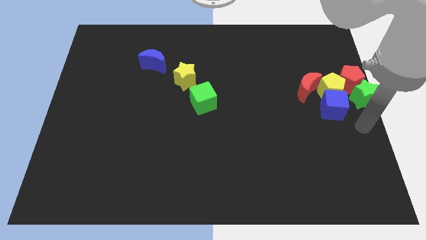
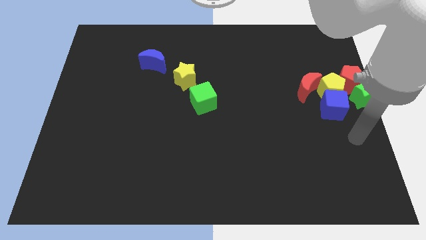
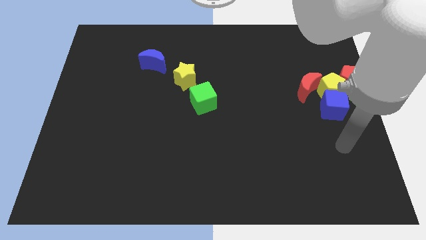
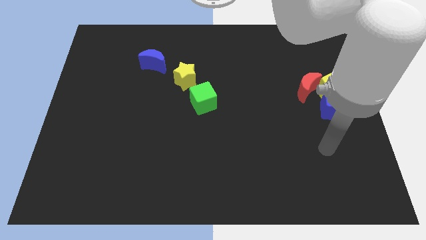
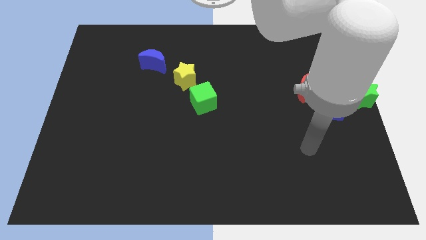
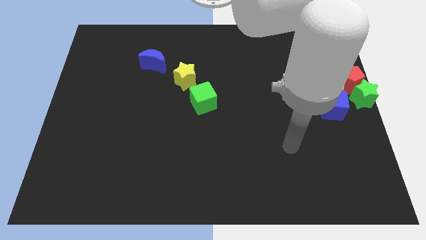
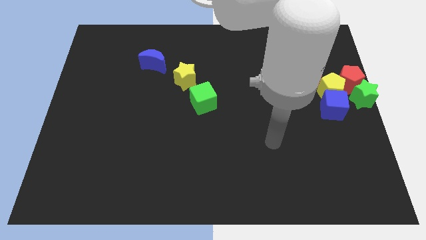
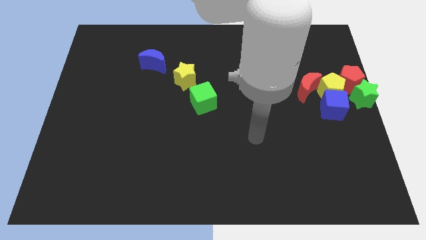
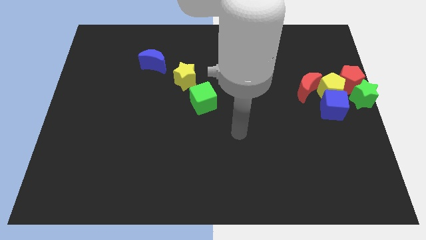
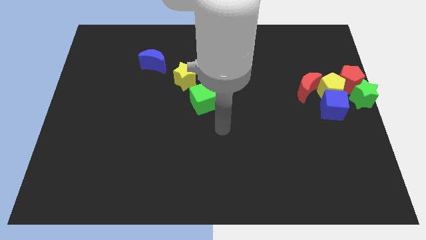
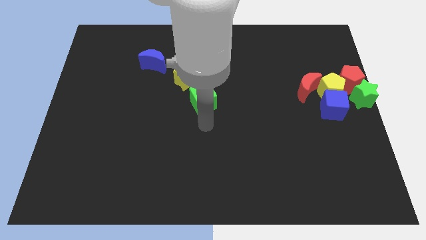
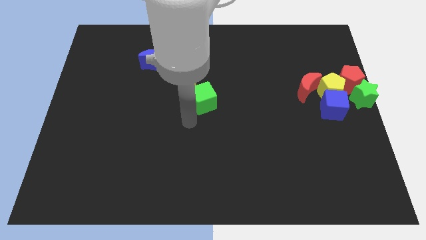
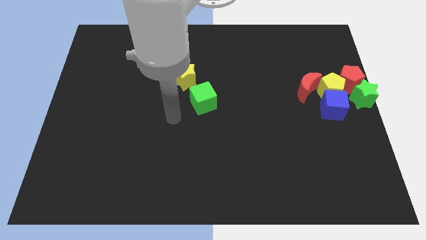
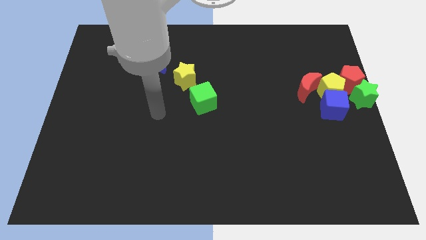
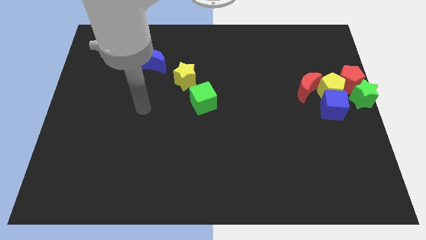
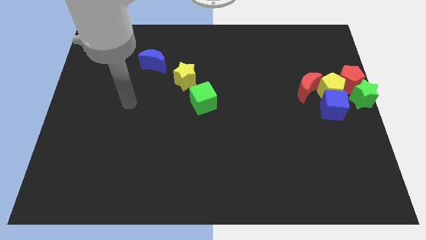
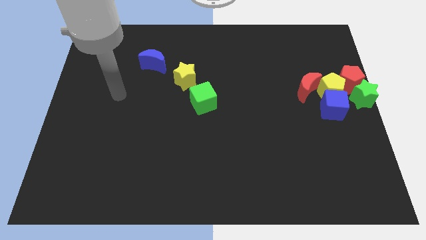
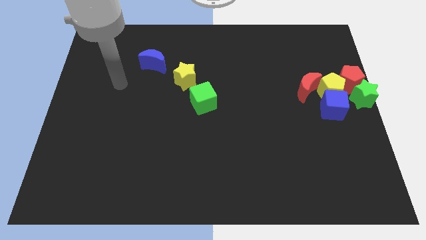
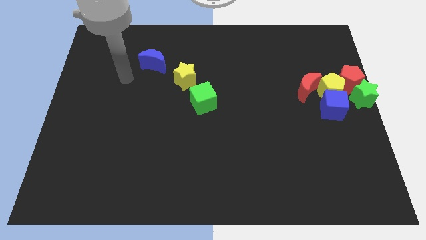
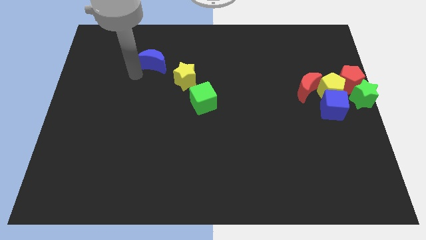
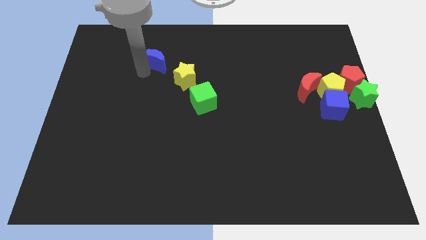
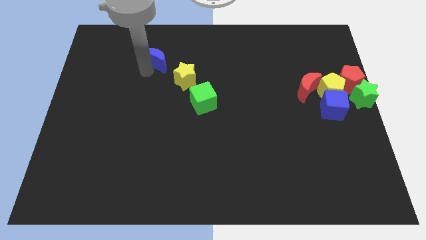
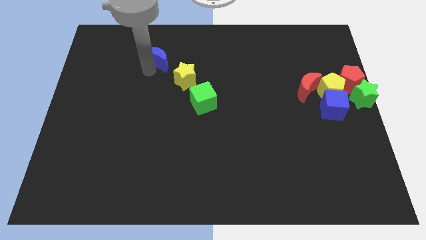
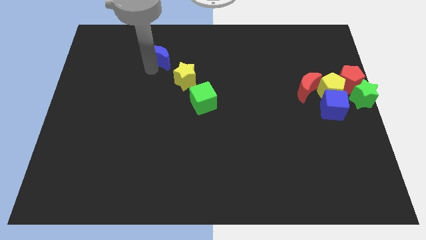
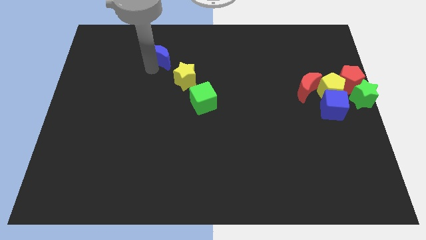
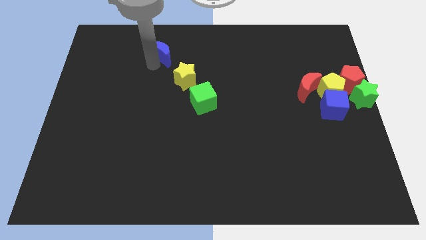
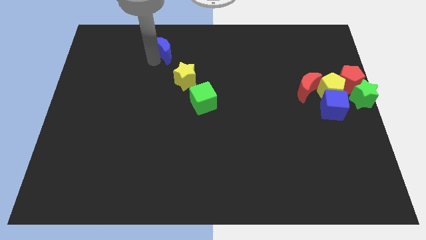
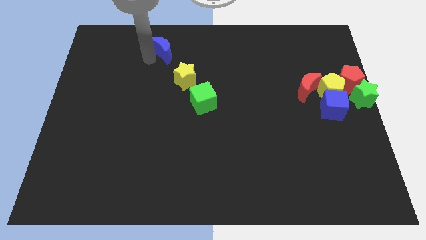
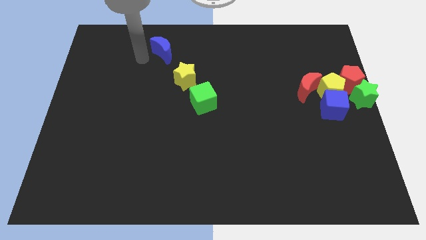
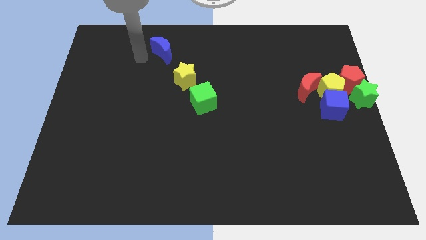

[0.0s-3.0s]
adjust the blue moon to the top left of the yellow star

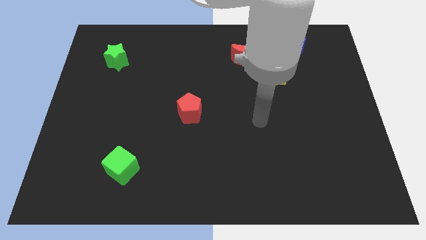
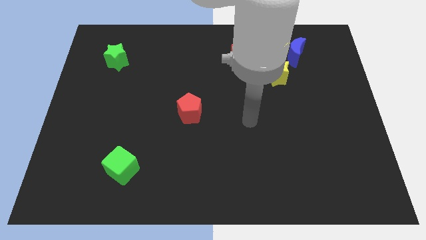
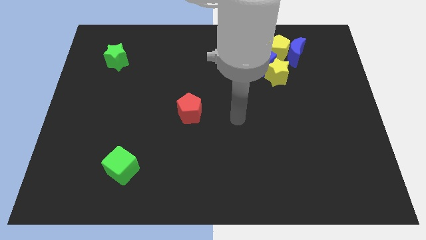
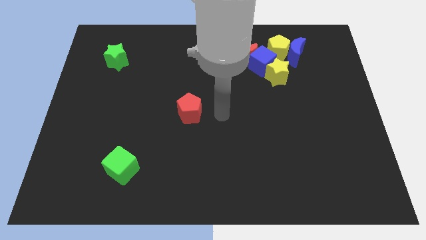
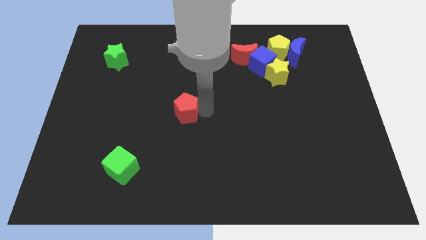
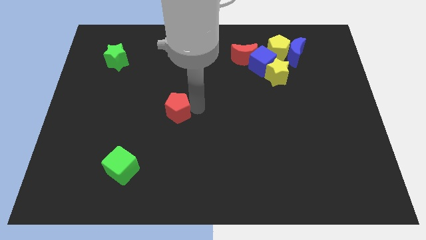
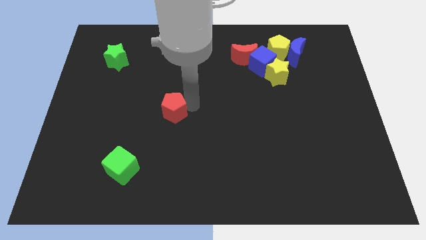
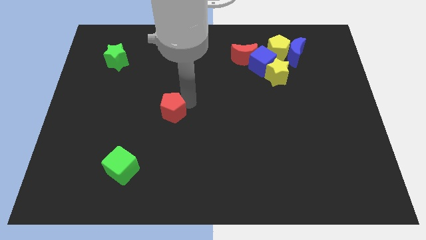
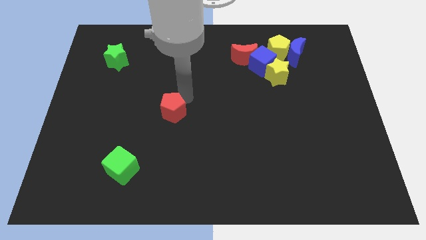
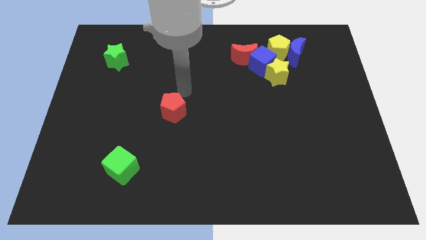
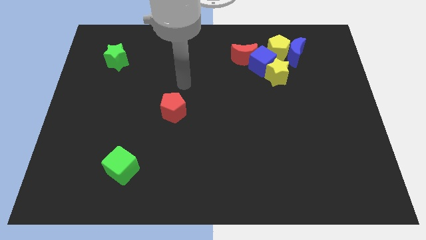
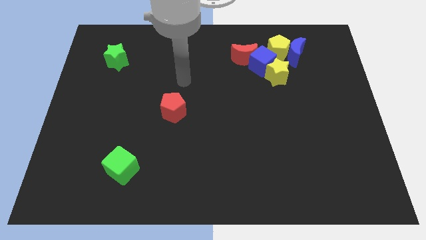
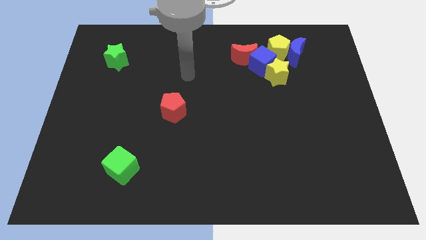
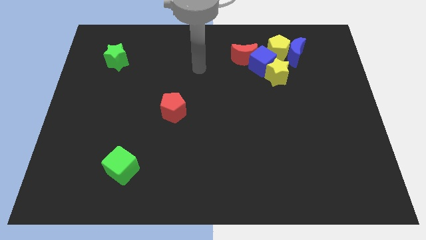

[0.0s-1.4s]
push the red pentagon towards left a bit

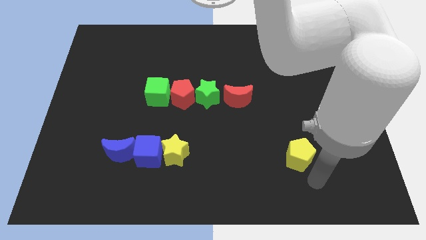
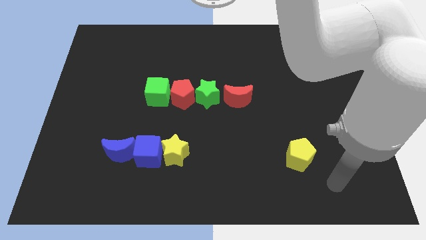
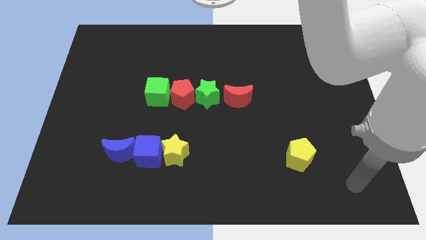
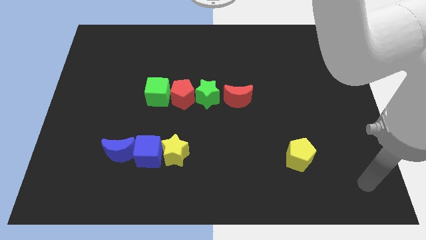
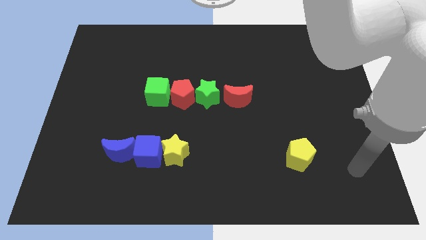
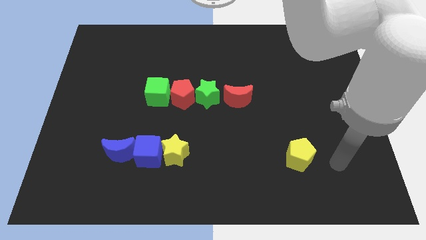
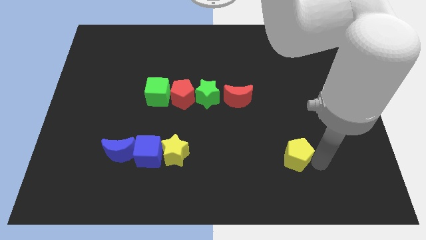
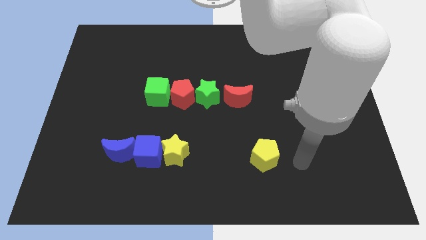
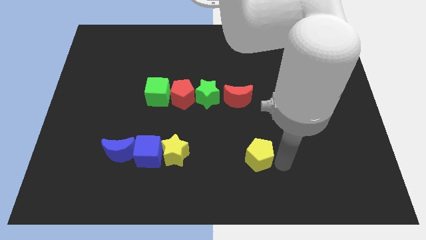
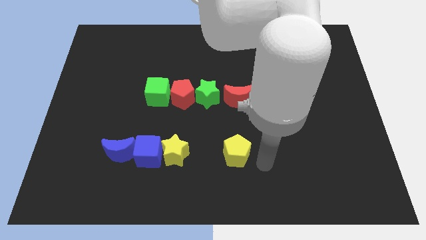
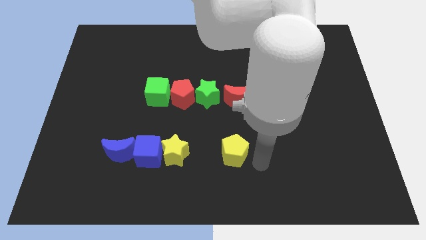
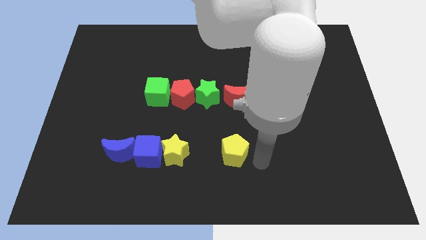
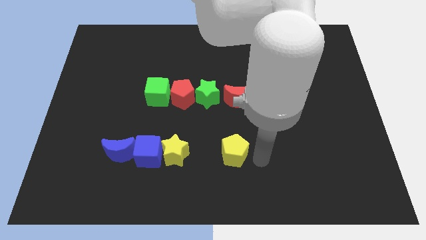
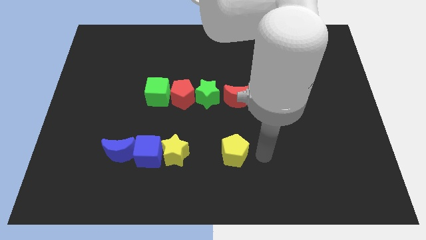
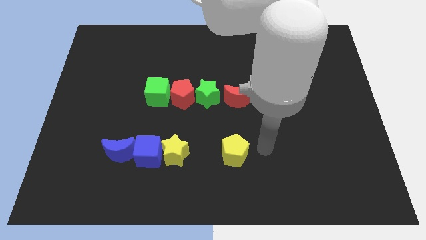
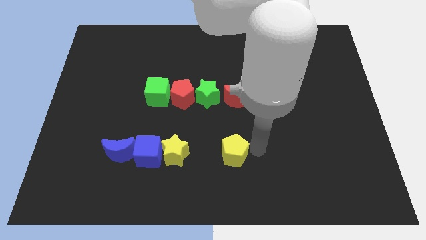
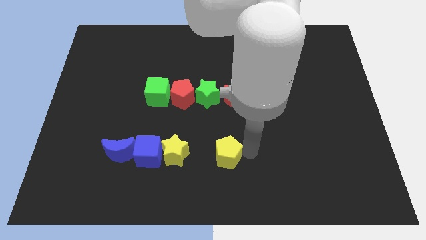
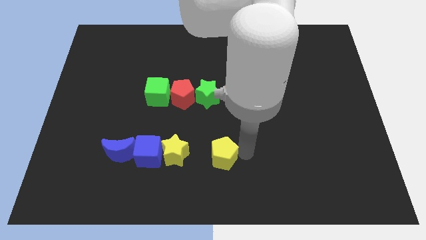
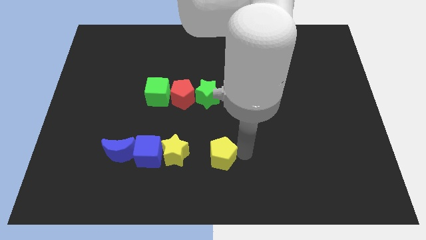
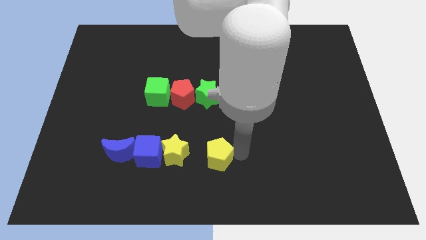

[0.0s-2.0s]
move the yellow pentagon close to the yellow star

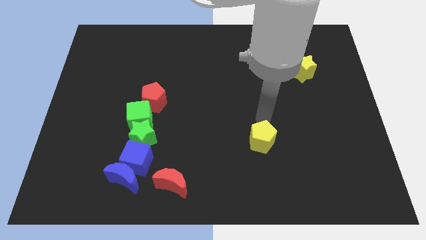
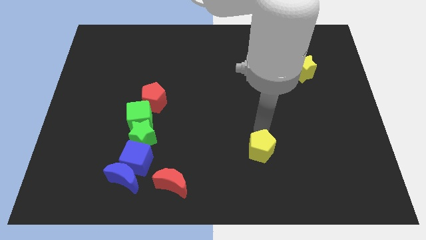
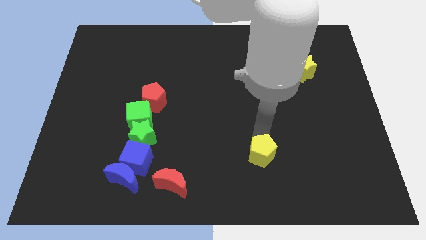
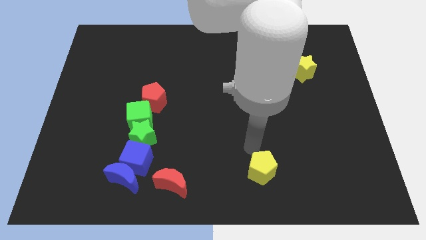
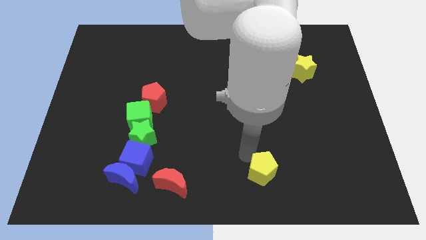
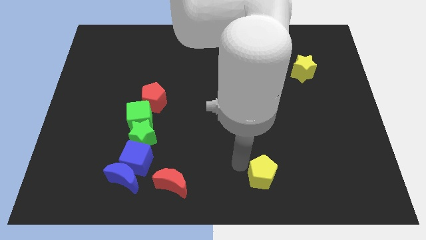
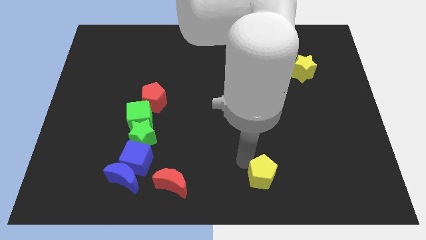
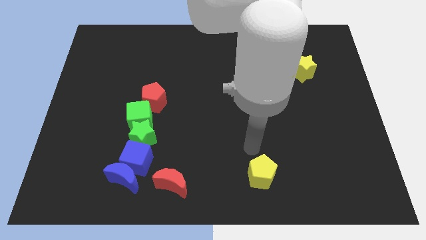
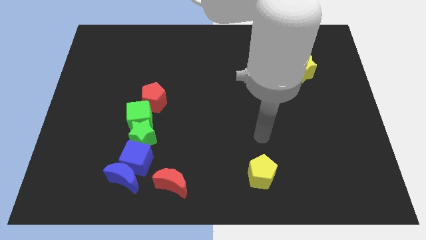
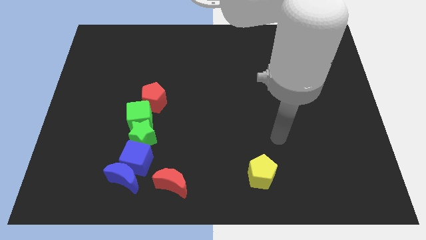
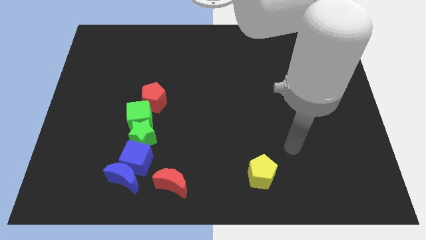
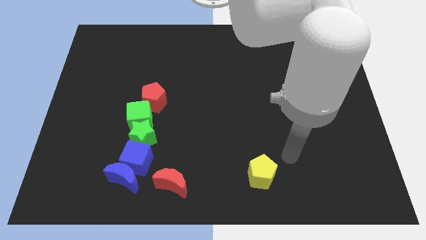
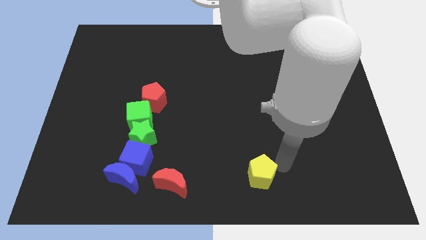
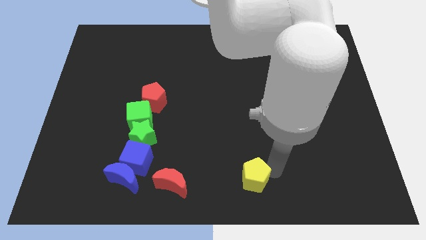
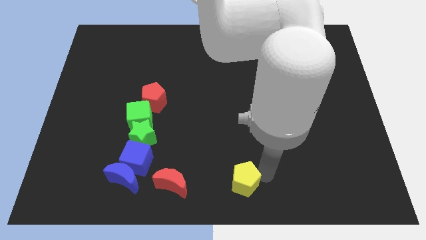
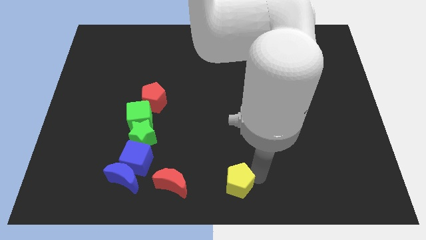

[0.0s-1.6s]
put the yellow pentagon horizontally right to the red moon

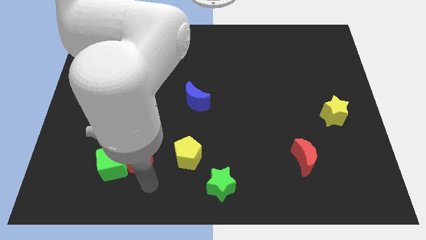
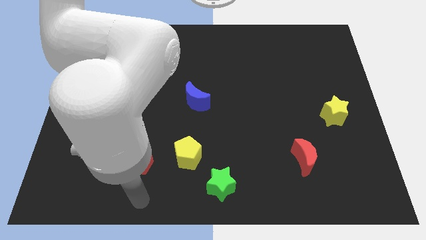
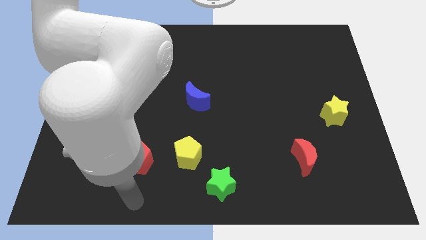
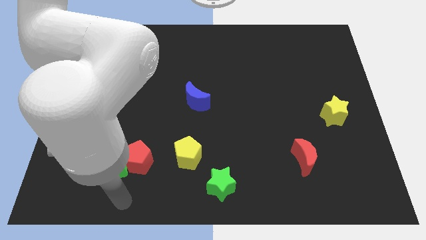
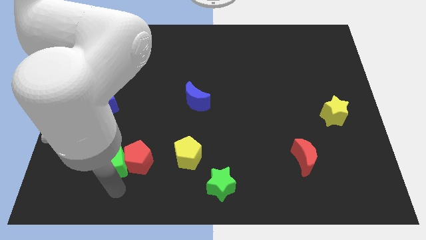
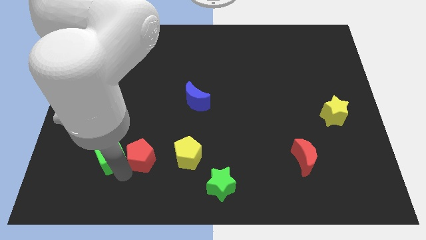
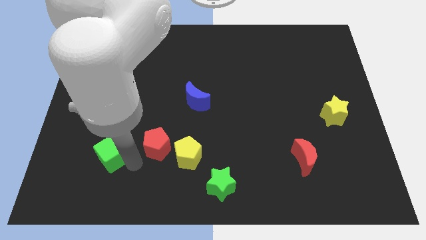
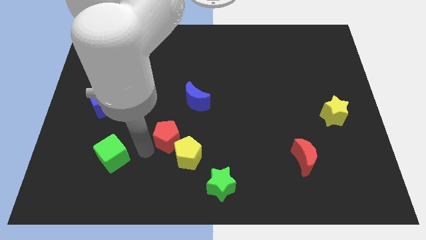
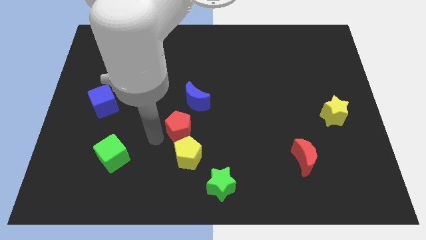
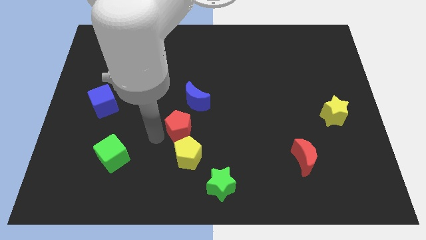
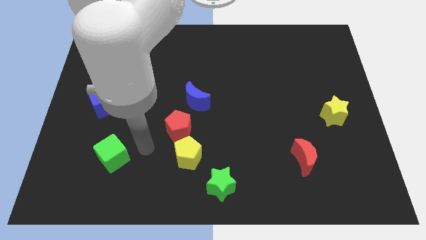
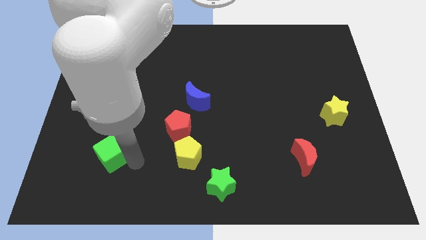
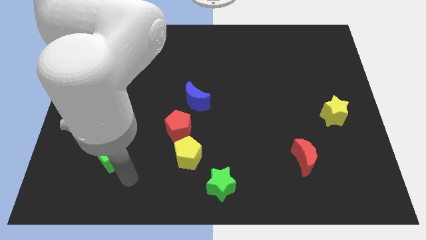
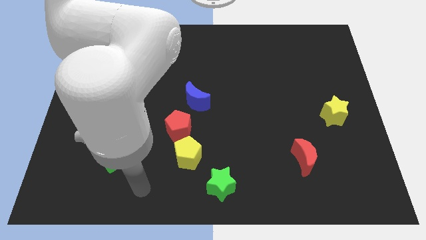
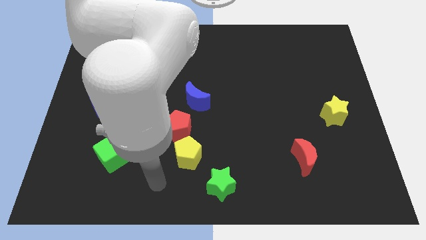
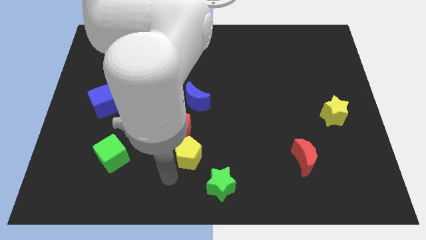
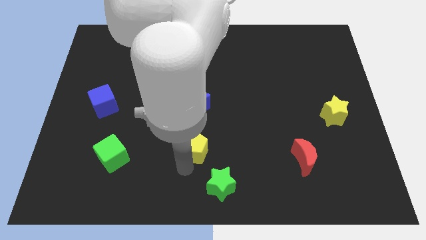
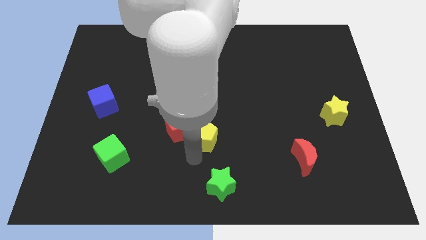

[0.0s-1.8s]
place the red pentagon above the yellow pentagon
